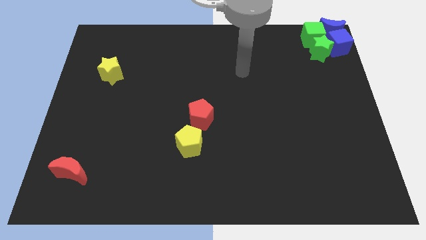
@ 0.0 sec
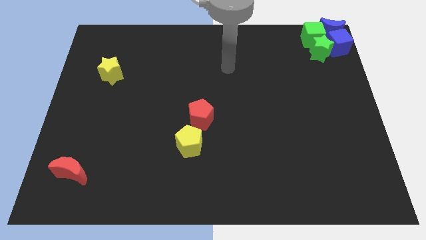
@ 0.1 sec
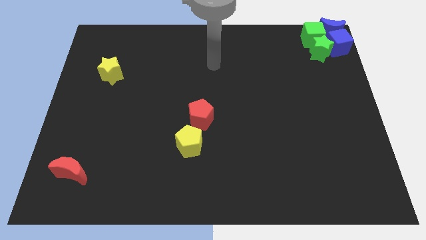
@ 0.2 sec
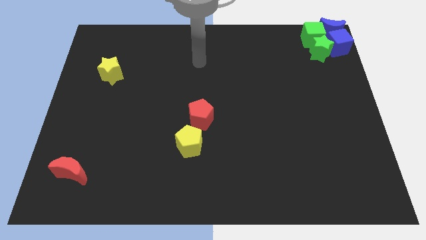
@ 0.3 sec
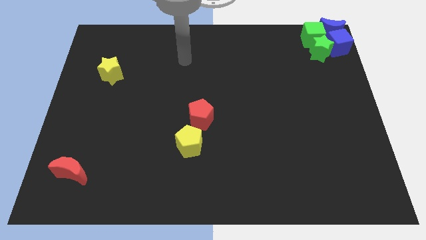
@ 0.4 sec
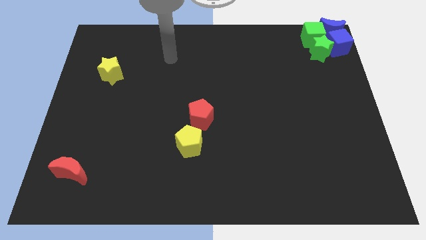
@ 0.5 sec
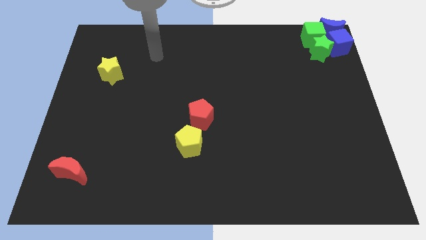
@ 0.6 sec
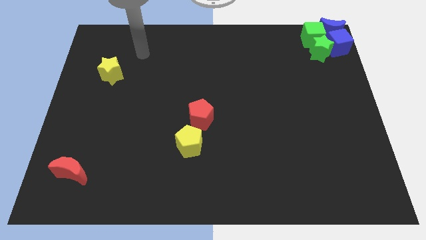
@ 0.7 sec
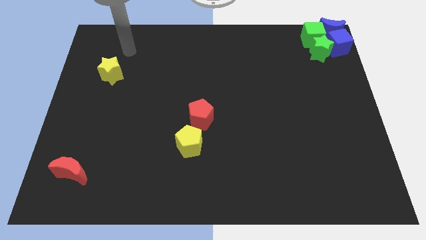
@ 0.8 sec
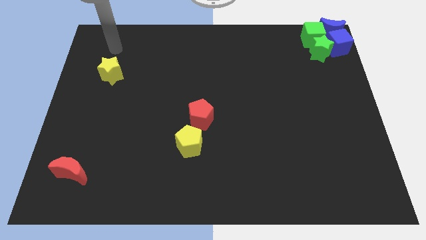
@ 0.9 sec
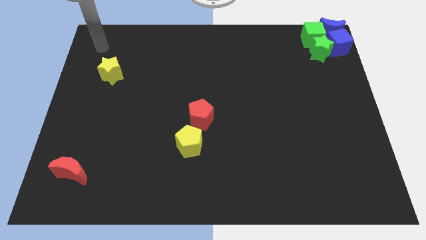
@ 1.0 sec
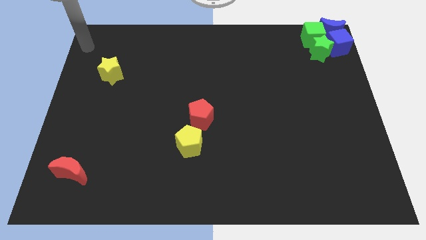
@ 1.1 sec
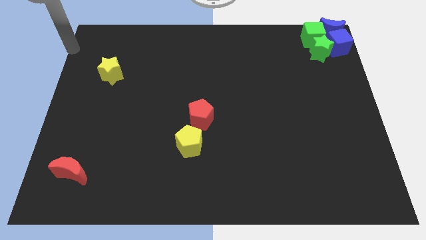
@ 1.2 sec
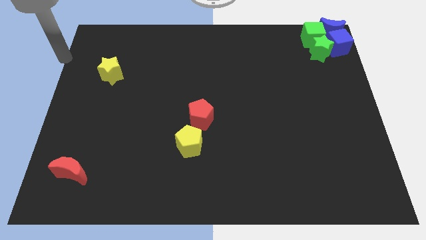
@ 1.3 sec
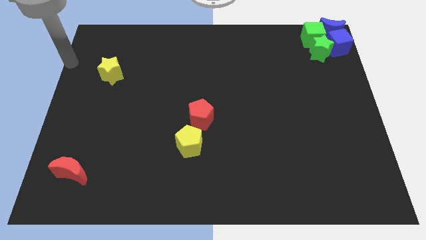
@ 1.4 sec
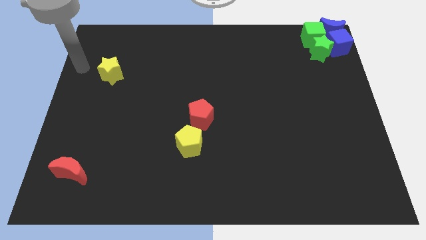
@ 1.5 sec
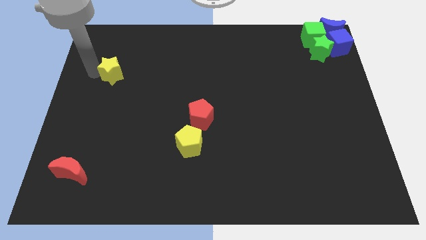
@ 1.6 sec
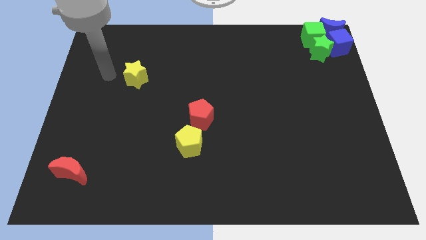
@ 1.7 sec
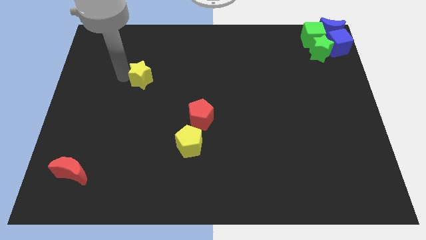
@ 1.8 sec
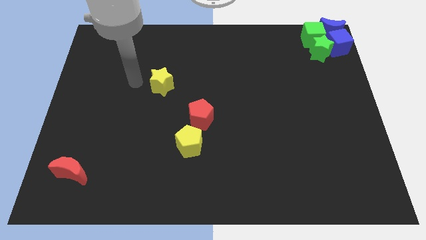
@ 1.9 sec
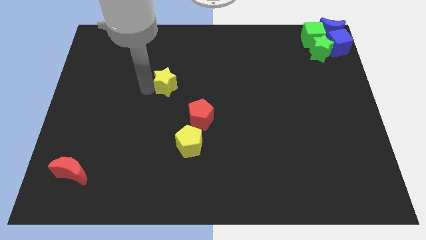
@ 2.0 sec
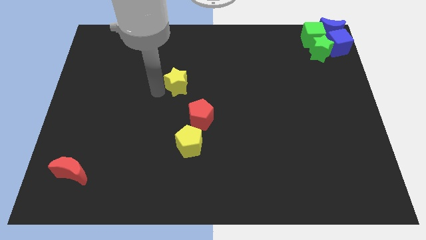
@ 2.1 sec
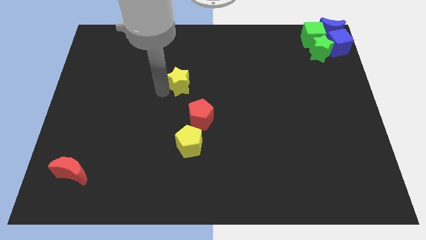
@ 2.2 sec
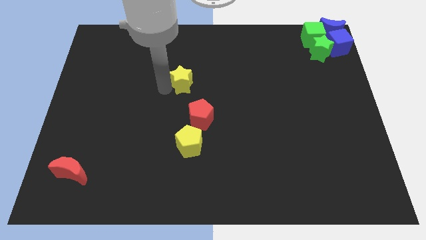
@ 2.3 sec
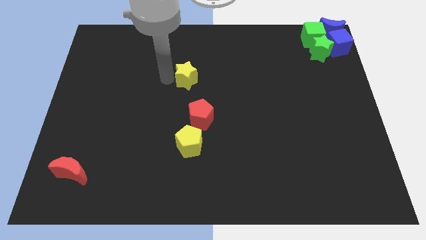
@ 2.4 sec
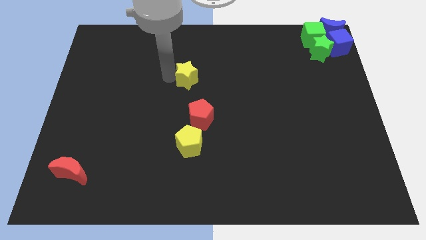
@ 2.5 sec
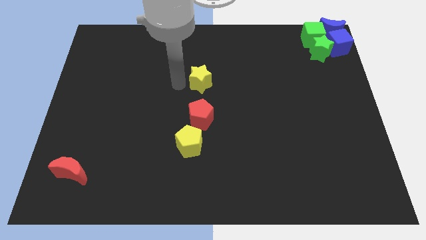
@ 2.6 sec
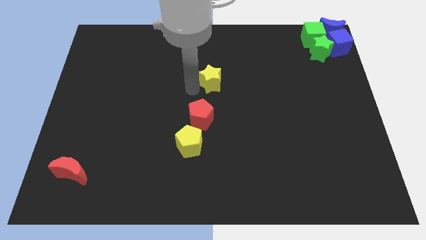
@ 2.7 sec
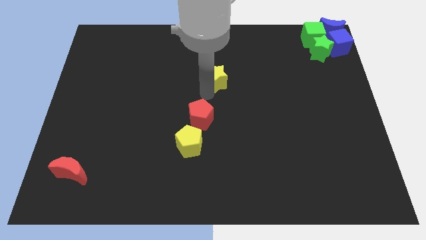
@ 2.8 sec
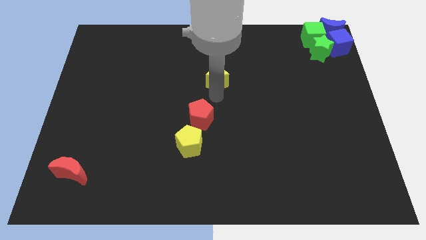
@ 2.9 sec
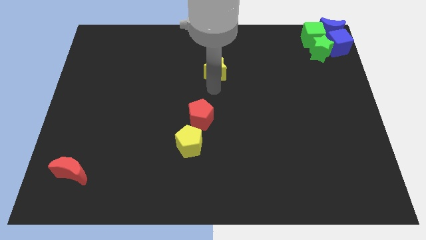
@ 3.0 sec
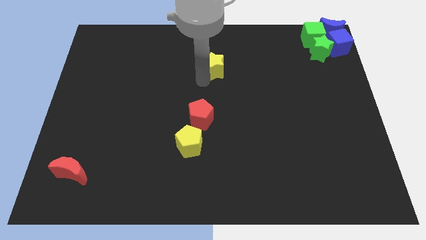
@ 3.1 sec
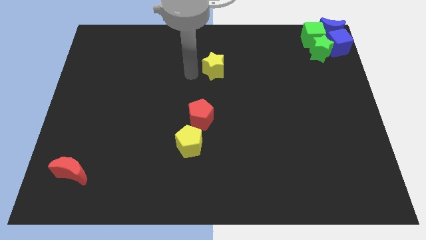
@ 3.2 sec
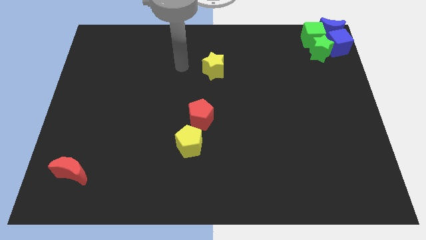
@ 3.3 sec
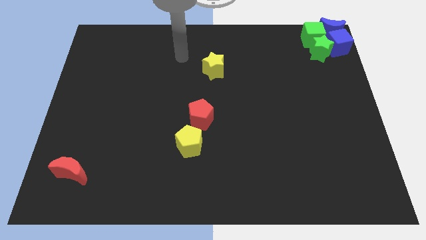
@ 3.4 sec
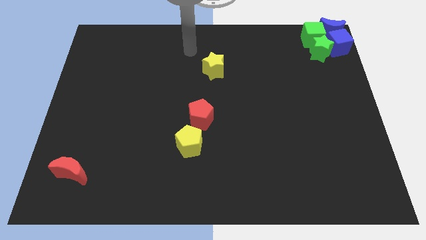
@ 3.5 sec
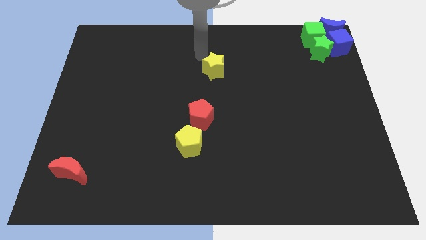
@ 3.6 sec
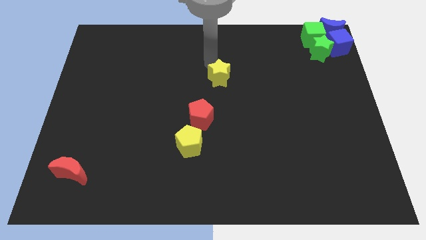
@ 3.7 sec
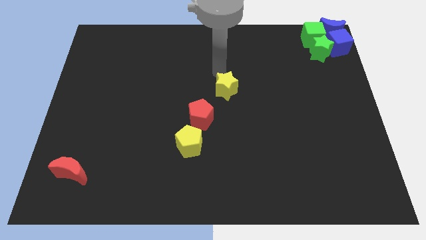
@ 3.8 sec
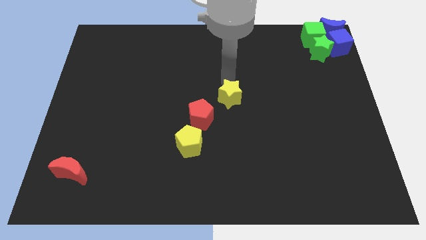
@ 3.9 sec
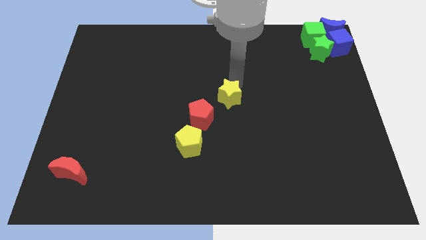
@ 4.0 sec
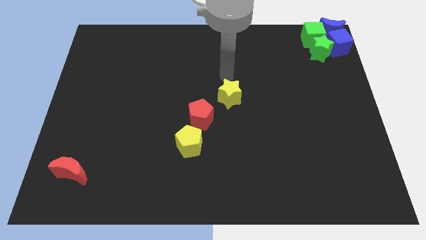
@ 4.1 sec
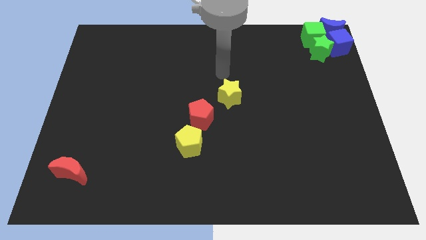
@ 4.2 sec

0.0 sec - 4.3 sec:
push the yellow star towards the center

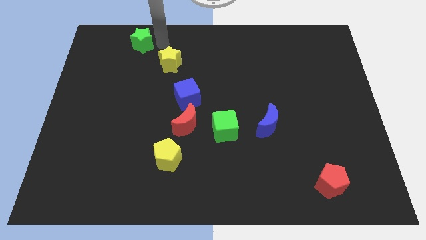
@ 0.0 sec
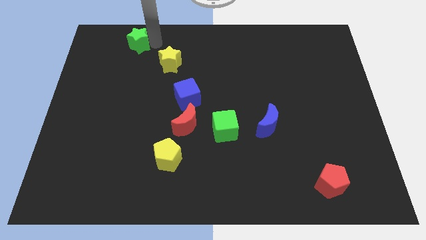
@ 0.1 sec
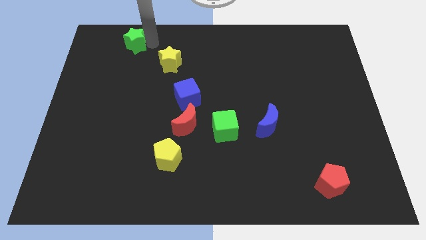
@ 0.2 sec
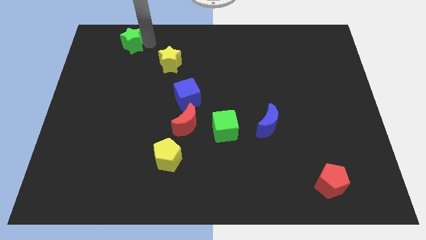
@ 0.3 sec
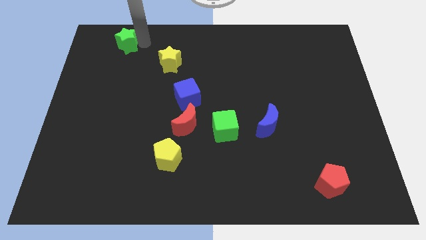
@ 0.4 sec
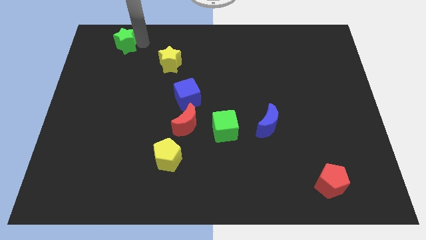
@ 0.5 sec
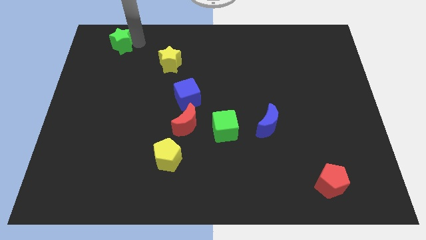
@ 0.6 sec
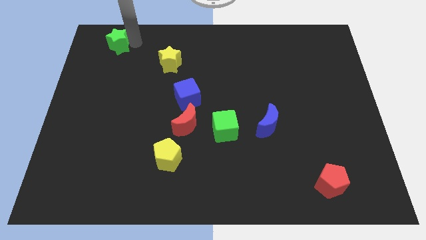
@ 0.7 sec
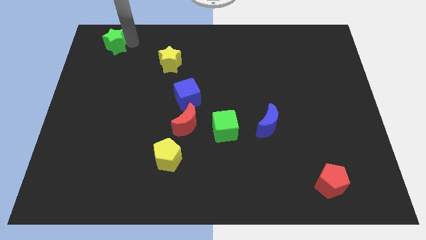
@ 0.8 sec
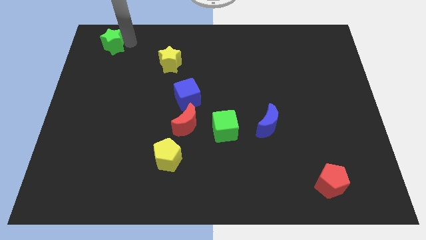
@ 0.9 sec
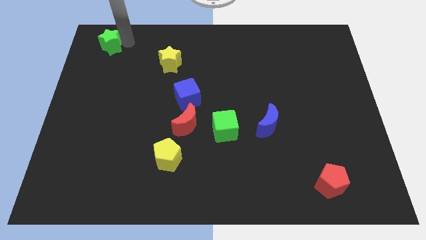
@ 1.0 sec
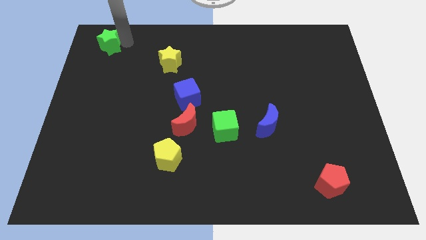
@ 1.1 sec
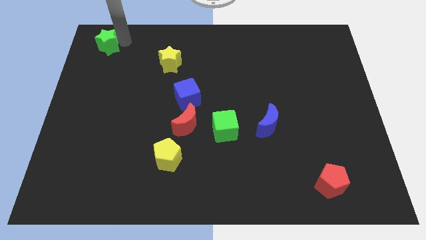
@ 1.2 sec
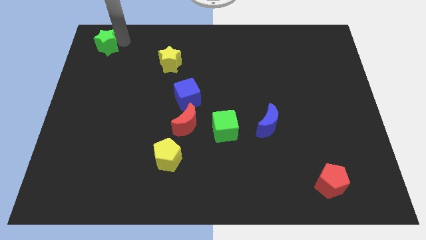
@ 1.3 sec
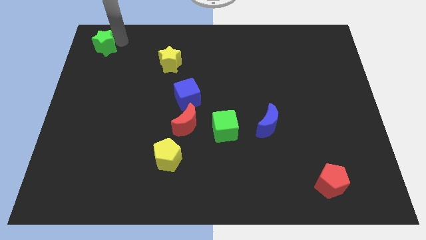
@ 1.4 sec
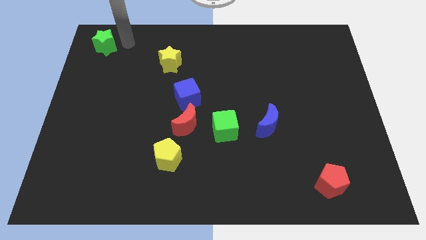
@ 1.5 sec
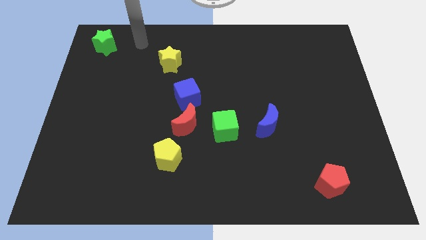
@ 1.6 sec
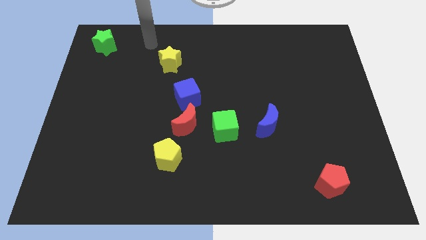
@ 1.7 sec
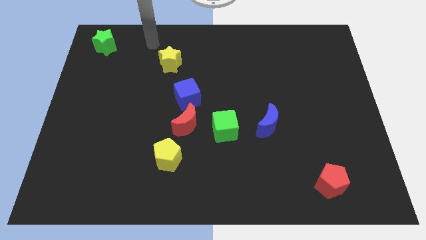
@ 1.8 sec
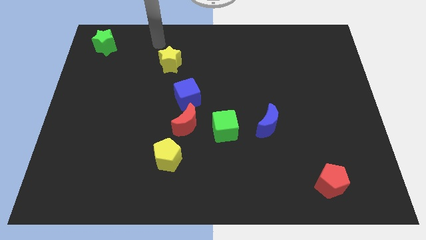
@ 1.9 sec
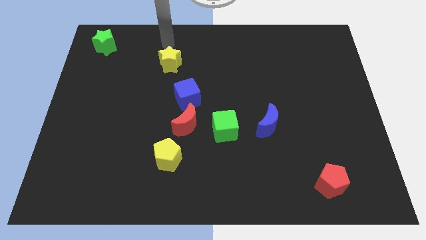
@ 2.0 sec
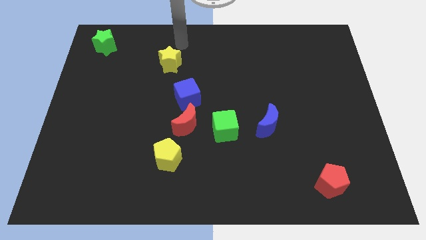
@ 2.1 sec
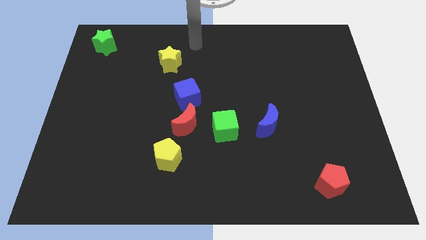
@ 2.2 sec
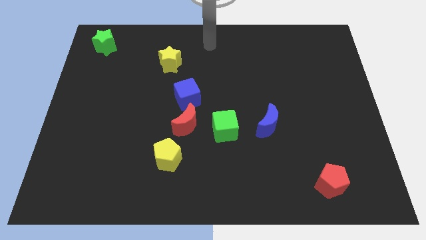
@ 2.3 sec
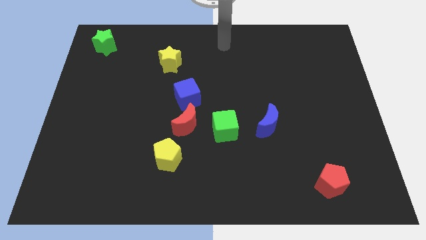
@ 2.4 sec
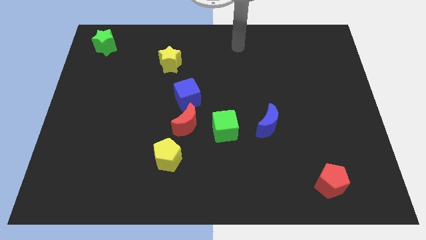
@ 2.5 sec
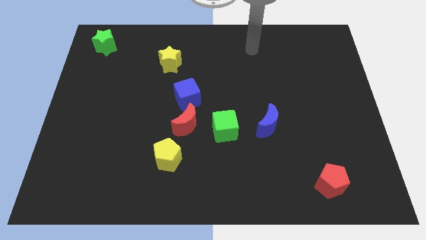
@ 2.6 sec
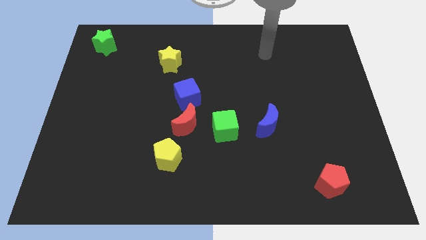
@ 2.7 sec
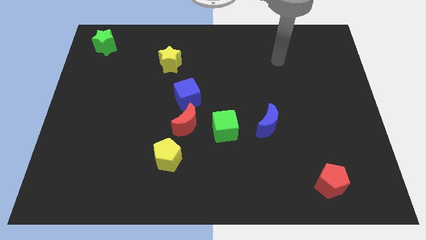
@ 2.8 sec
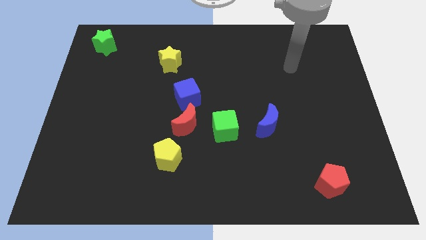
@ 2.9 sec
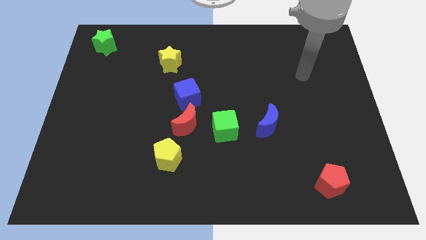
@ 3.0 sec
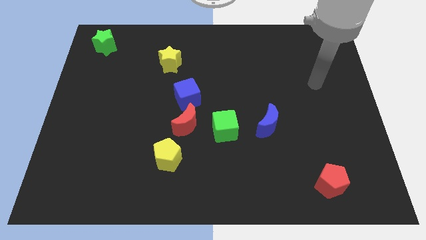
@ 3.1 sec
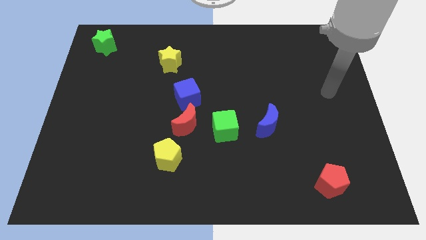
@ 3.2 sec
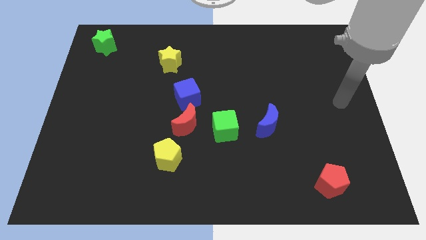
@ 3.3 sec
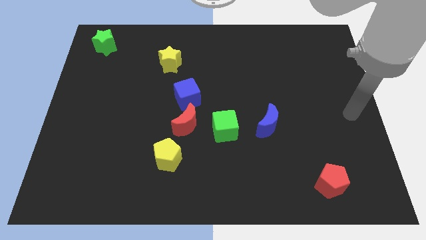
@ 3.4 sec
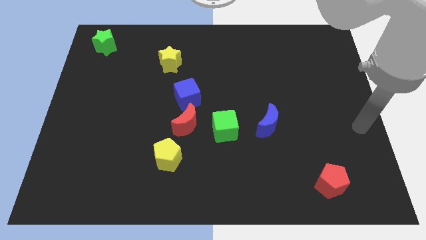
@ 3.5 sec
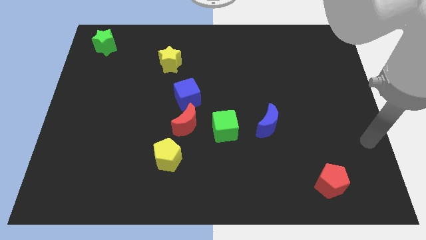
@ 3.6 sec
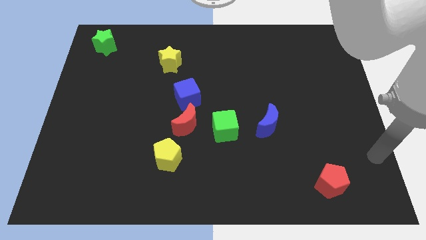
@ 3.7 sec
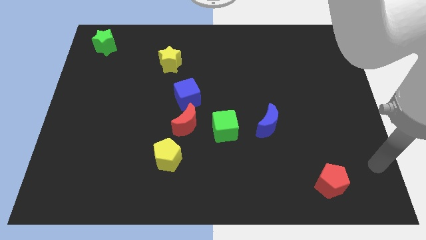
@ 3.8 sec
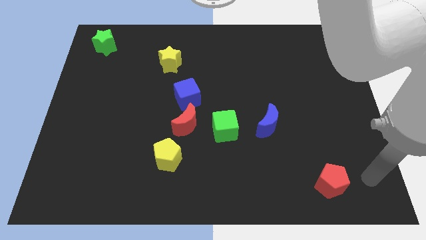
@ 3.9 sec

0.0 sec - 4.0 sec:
push the green star to the left side of the board

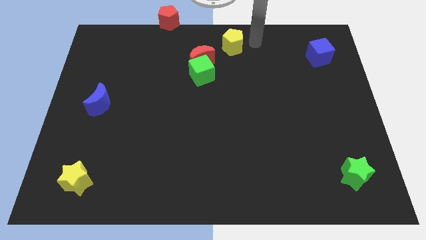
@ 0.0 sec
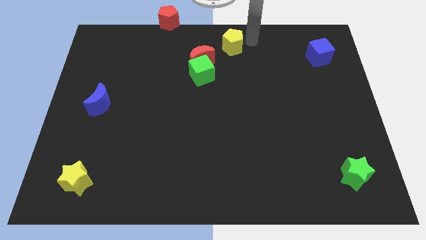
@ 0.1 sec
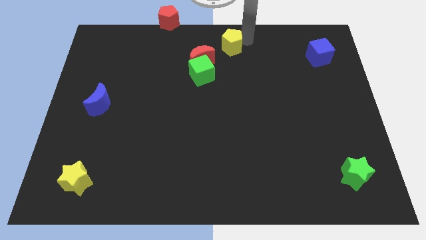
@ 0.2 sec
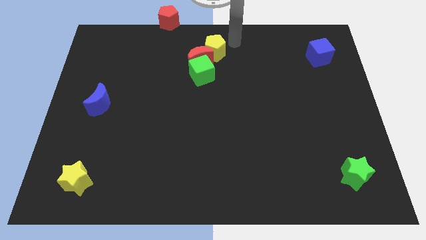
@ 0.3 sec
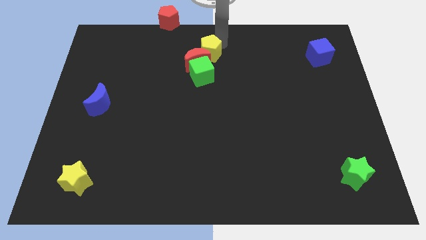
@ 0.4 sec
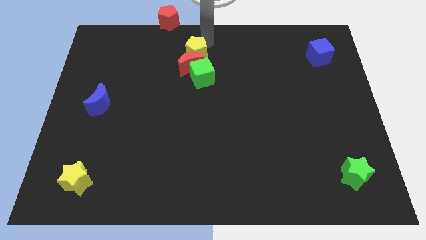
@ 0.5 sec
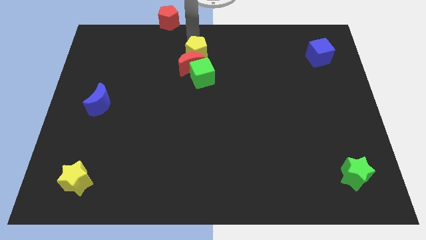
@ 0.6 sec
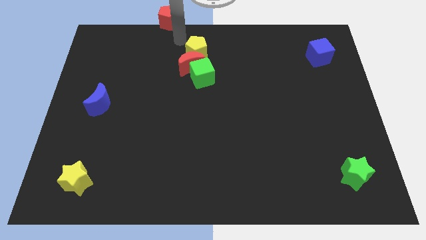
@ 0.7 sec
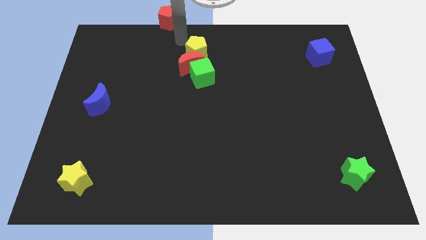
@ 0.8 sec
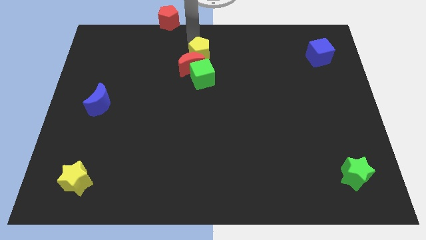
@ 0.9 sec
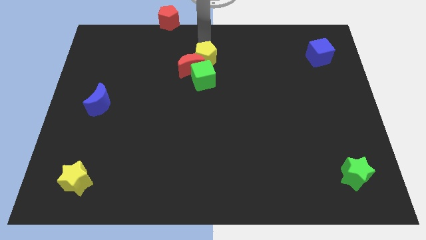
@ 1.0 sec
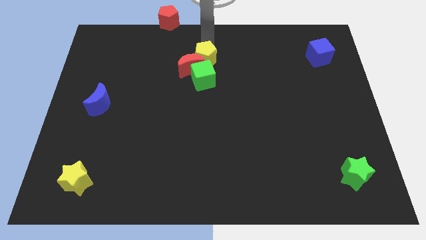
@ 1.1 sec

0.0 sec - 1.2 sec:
push yellow pentagon into the red moon
